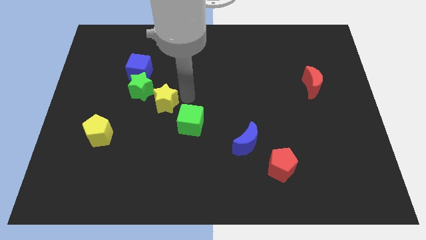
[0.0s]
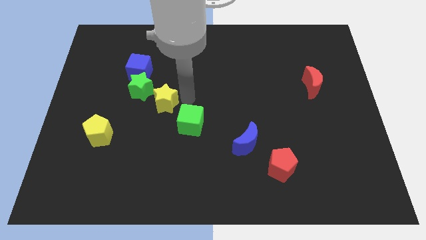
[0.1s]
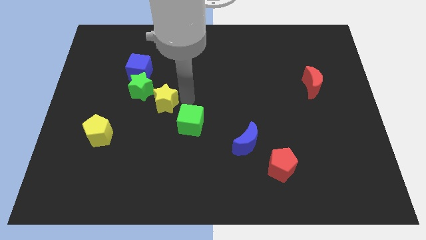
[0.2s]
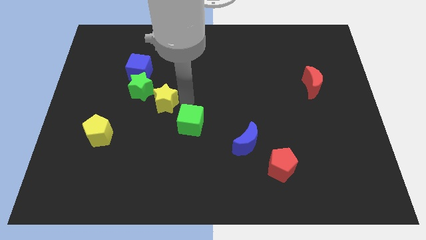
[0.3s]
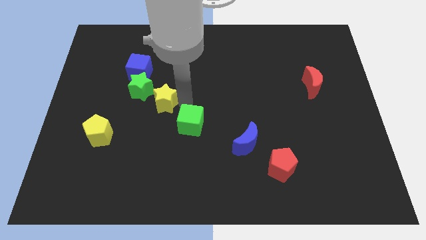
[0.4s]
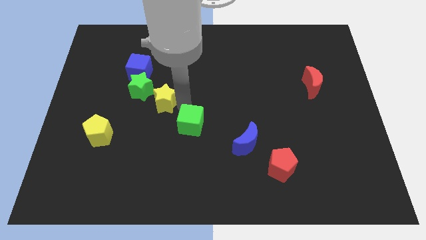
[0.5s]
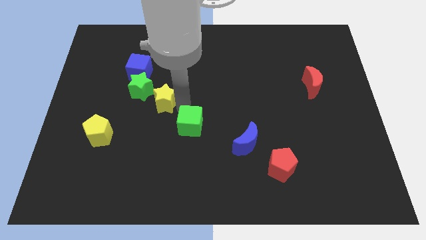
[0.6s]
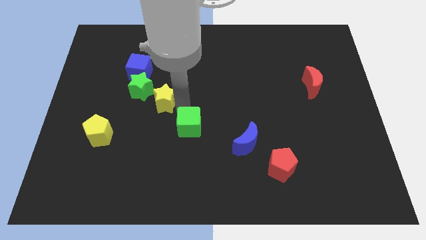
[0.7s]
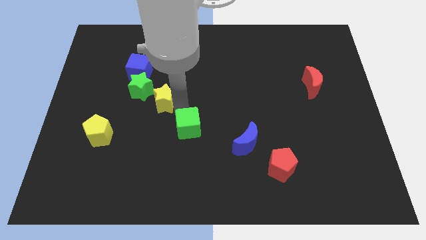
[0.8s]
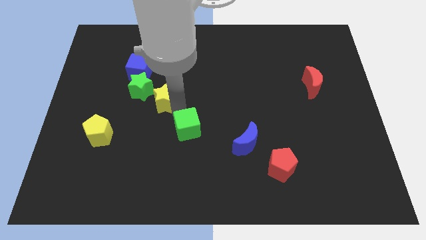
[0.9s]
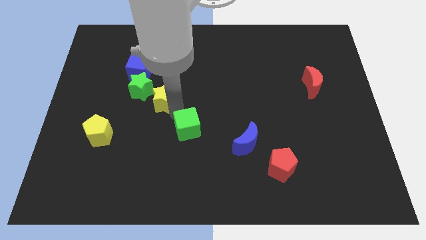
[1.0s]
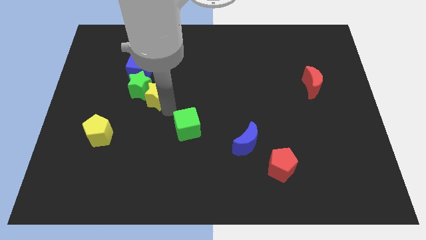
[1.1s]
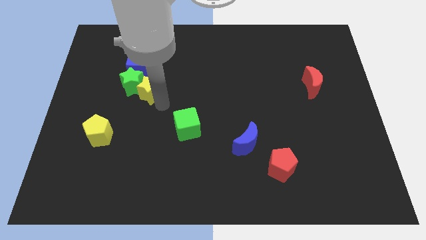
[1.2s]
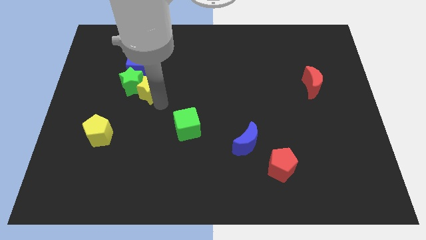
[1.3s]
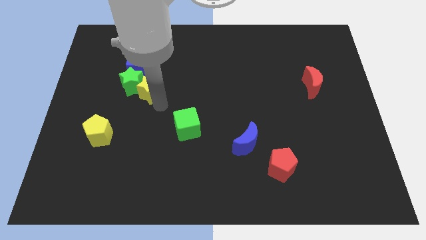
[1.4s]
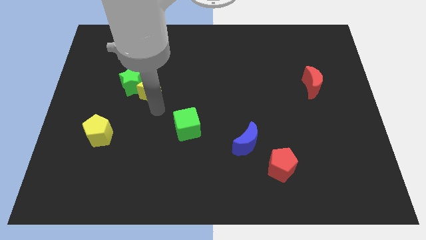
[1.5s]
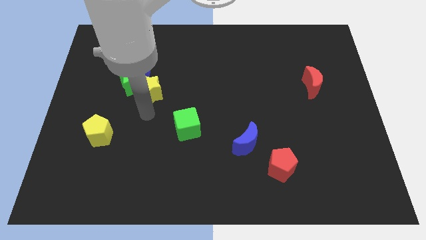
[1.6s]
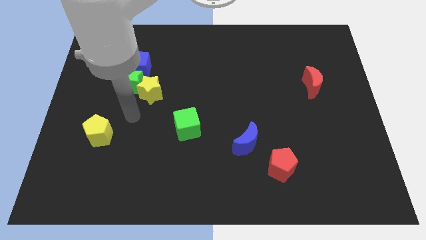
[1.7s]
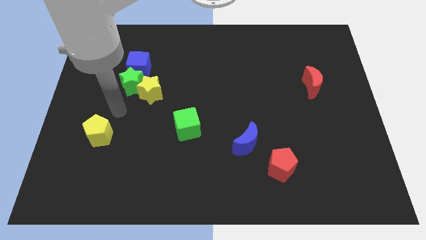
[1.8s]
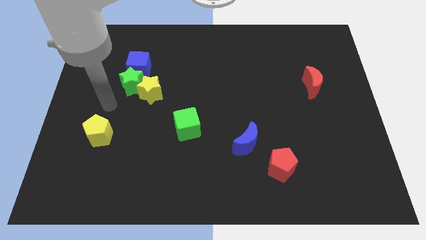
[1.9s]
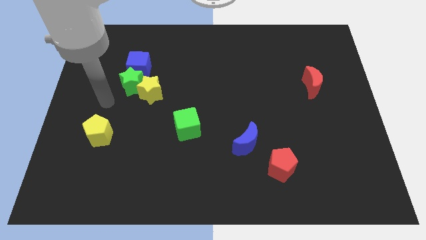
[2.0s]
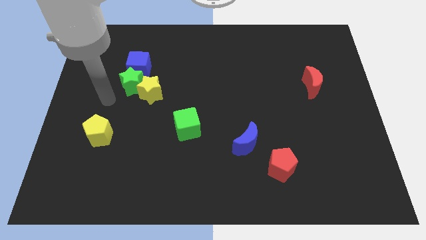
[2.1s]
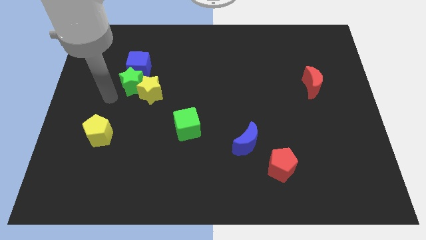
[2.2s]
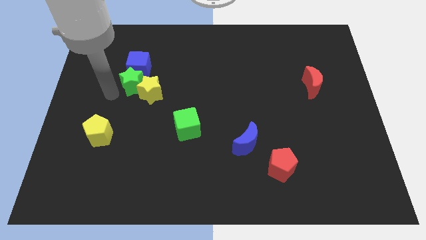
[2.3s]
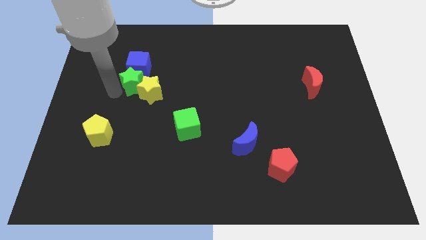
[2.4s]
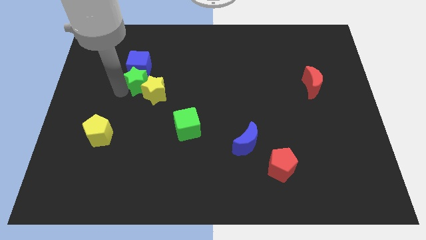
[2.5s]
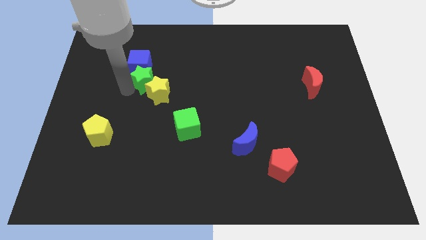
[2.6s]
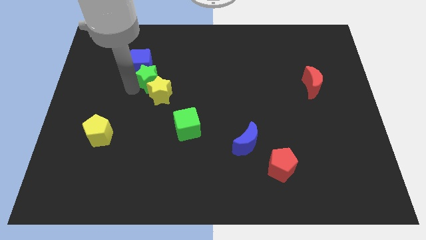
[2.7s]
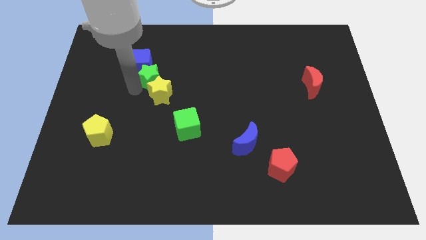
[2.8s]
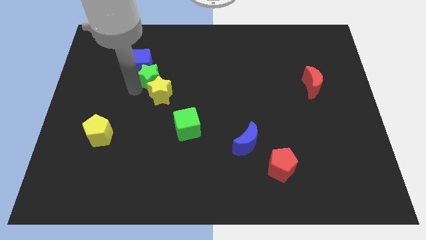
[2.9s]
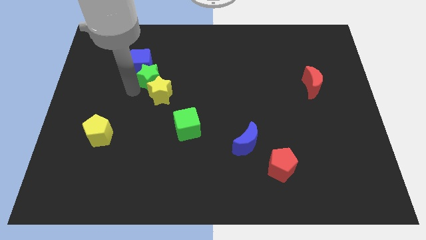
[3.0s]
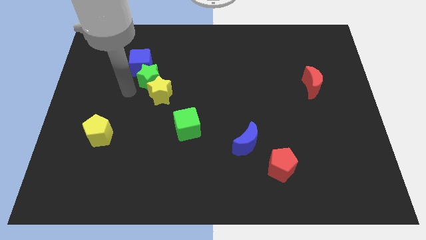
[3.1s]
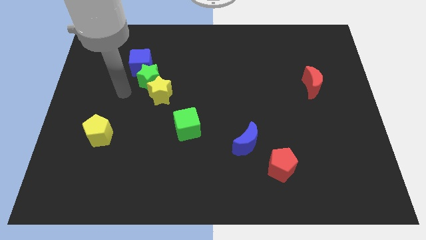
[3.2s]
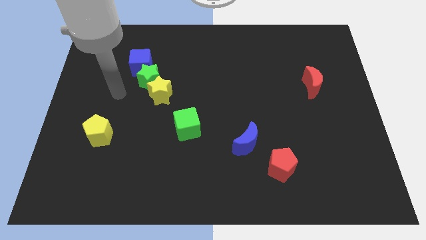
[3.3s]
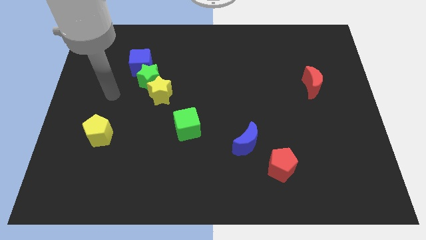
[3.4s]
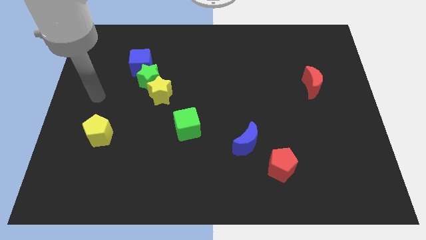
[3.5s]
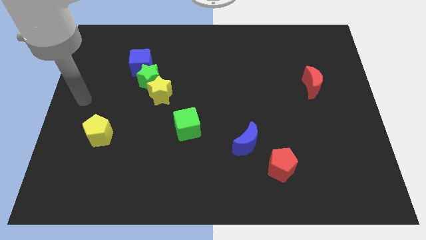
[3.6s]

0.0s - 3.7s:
separate the green cube from the group of blocks

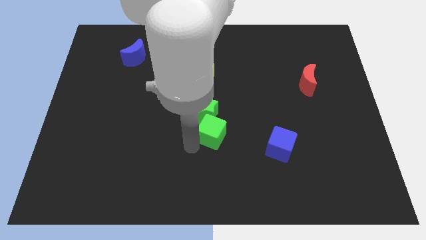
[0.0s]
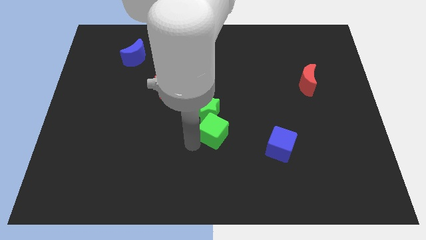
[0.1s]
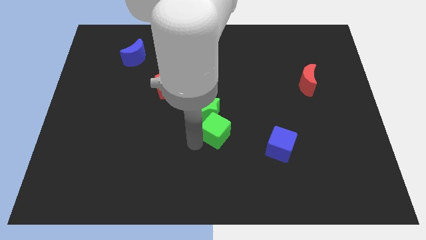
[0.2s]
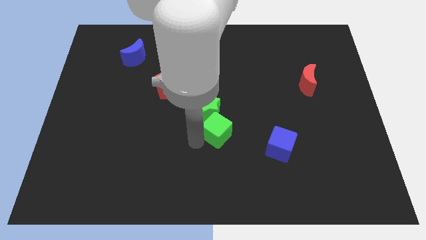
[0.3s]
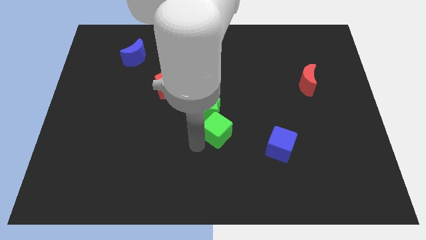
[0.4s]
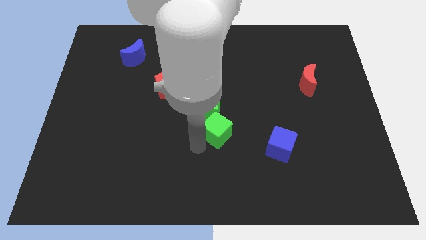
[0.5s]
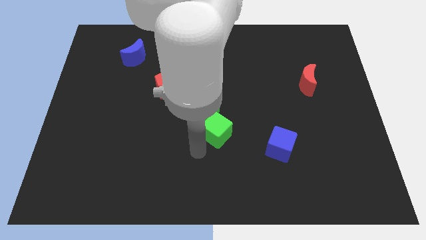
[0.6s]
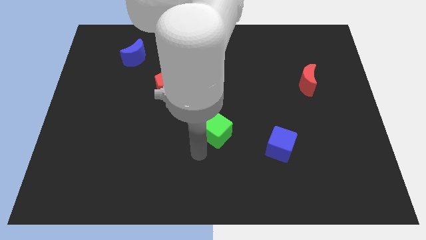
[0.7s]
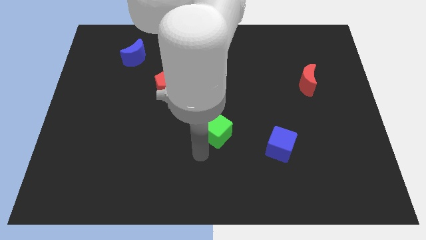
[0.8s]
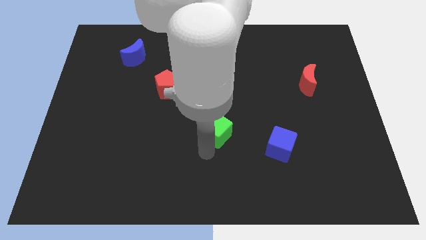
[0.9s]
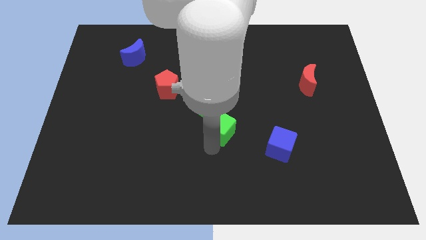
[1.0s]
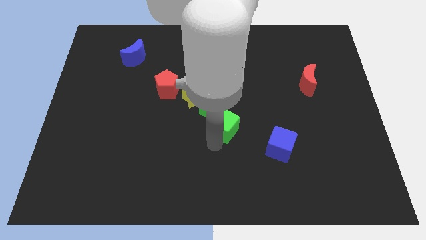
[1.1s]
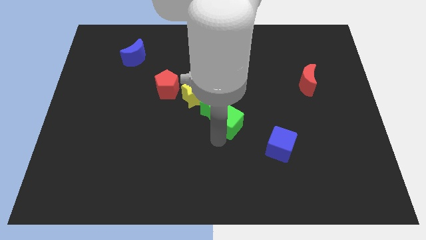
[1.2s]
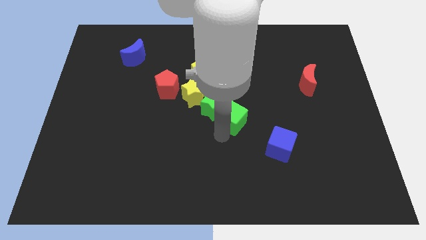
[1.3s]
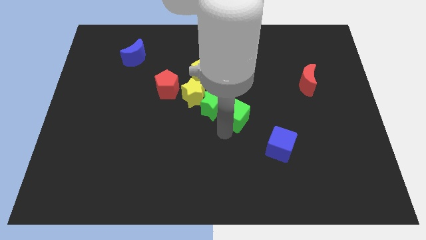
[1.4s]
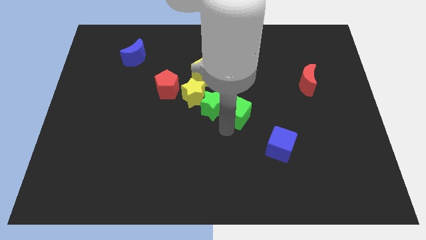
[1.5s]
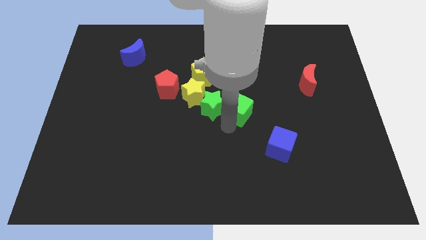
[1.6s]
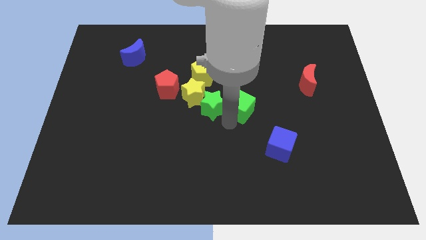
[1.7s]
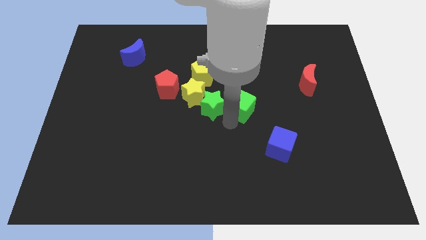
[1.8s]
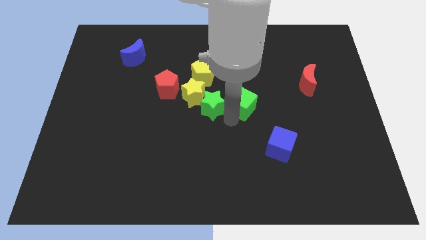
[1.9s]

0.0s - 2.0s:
slide the green cube to the right side of the green star

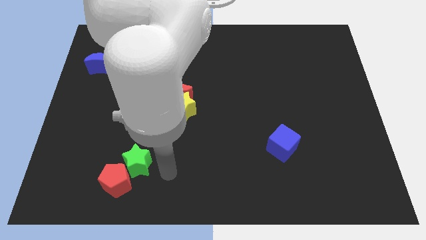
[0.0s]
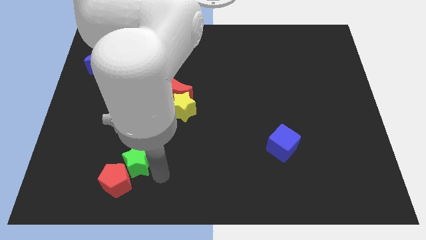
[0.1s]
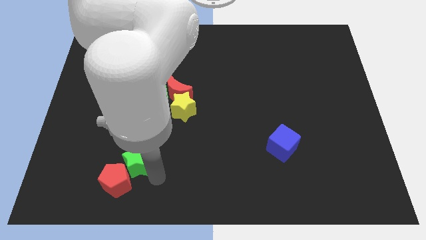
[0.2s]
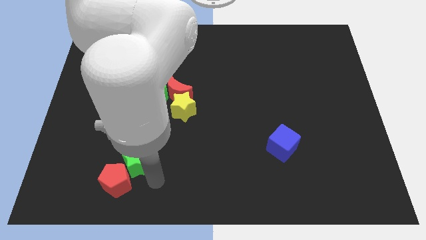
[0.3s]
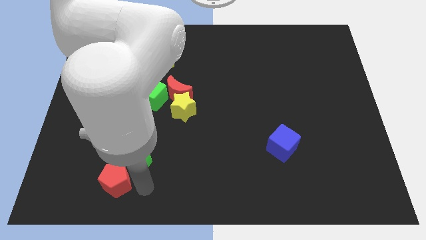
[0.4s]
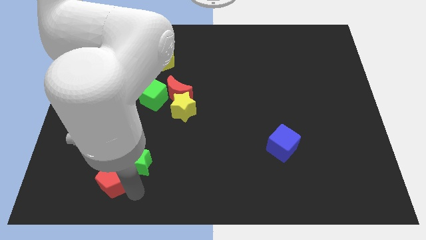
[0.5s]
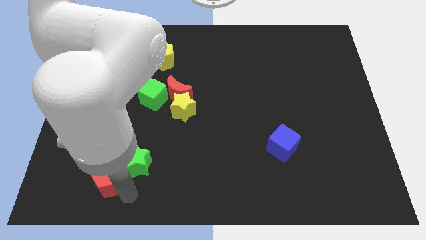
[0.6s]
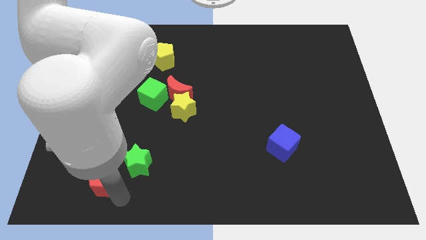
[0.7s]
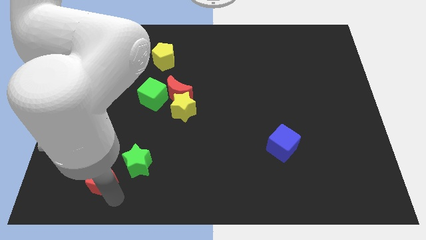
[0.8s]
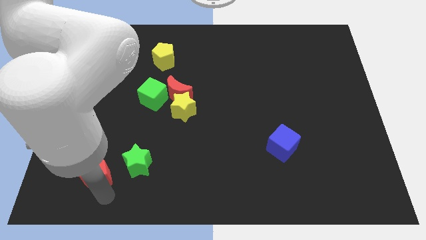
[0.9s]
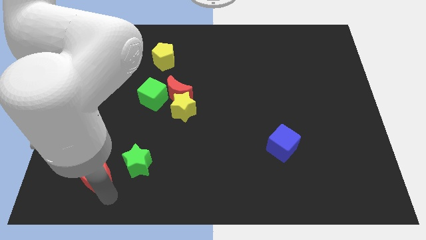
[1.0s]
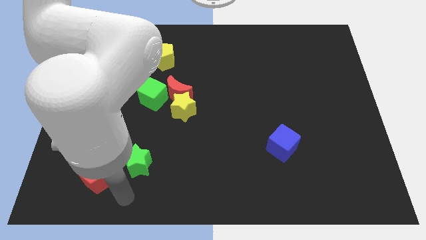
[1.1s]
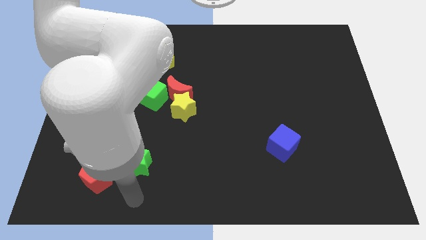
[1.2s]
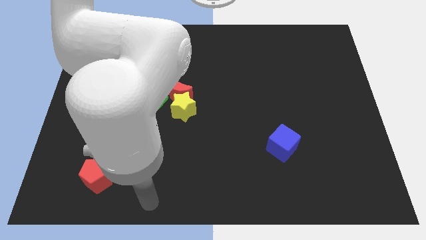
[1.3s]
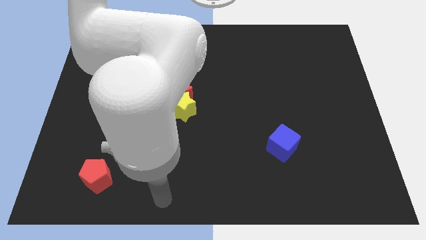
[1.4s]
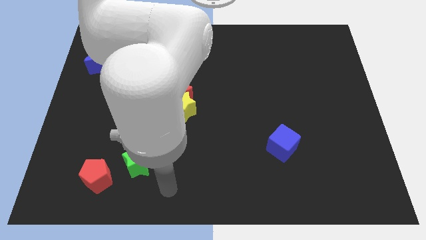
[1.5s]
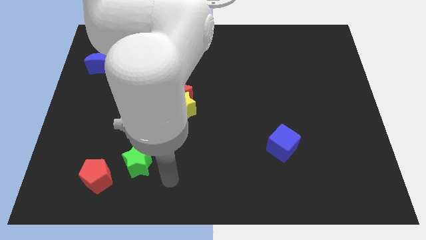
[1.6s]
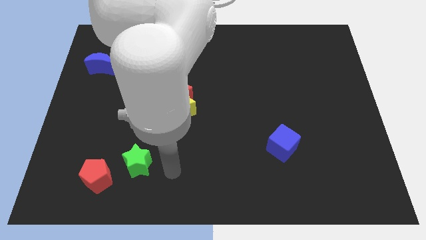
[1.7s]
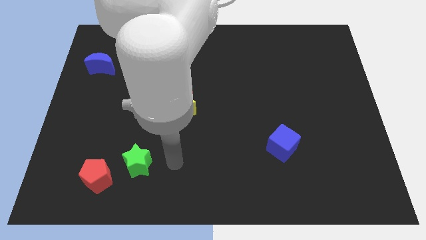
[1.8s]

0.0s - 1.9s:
separate the green star and red pentagon

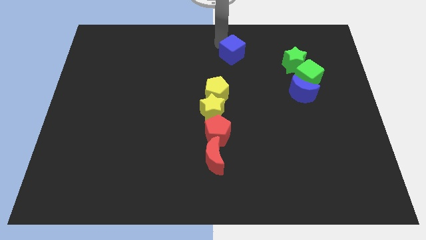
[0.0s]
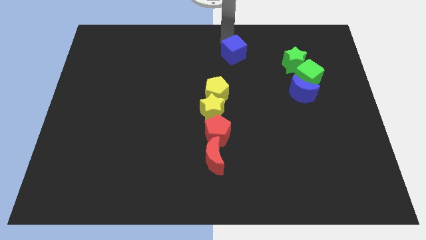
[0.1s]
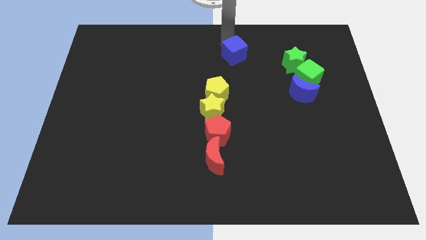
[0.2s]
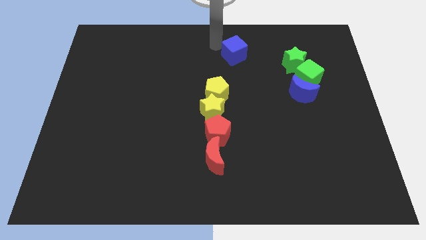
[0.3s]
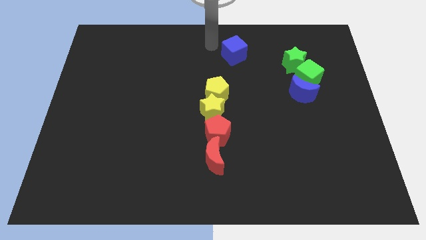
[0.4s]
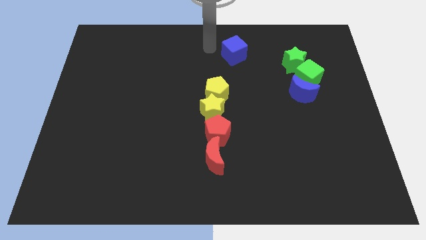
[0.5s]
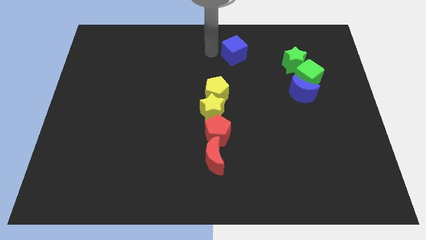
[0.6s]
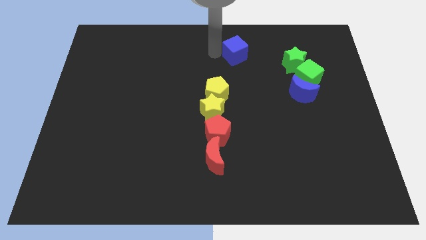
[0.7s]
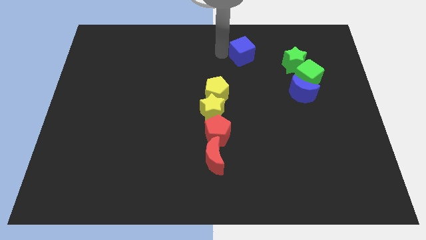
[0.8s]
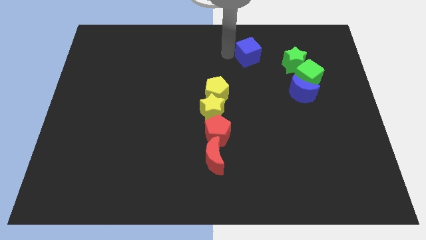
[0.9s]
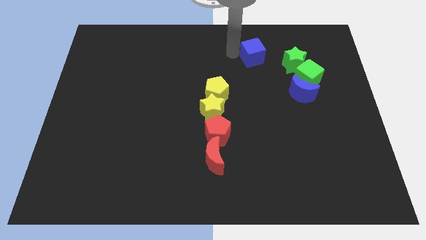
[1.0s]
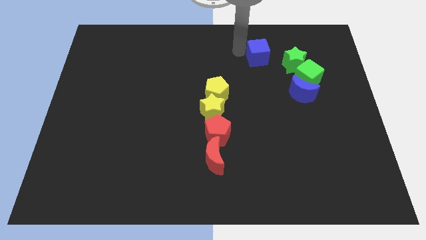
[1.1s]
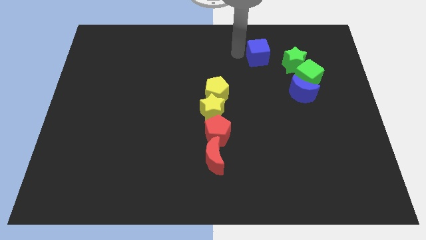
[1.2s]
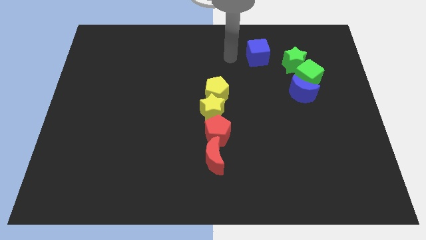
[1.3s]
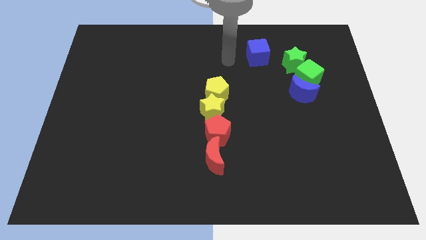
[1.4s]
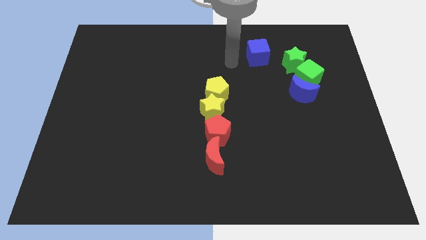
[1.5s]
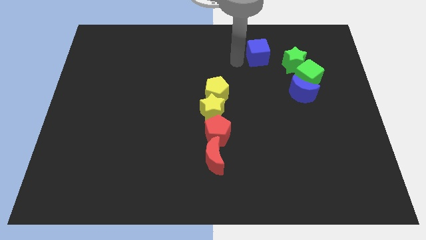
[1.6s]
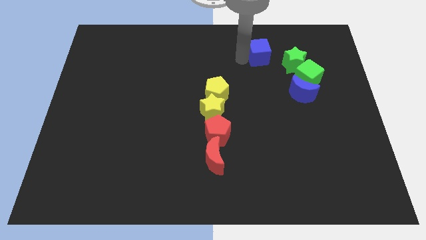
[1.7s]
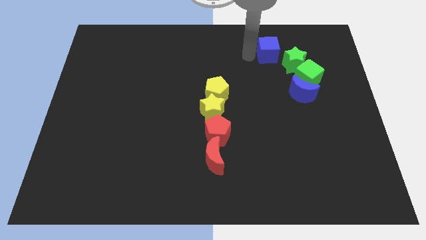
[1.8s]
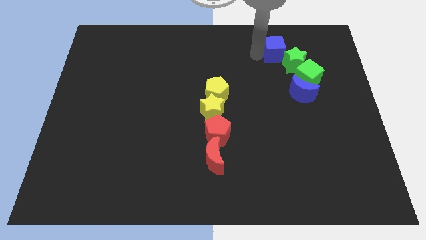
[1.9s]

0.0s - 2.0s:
push the blue cube to the top left side of the green star
